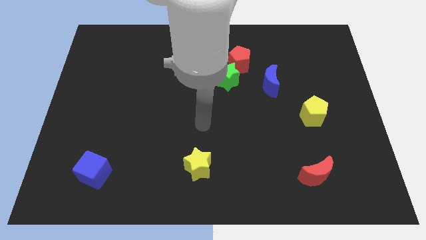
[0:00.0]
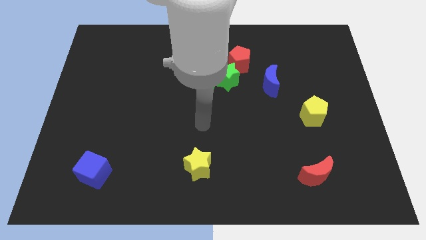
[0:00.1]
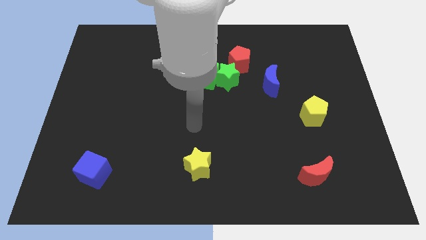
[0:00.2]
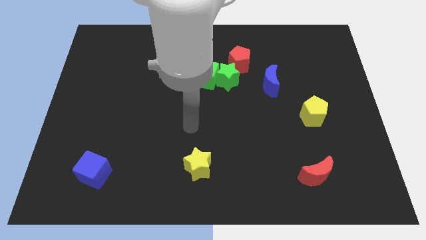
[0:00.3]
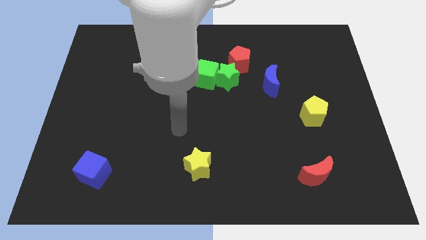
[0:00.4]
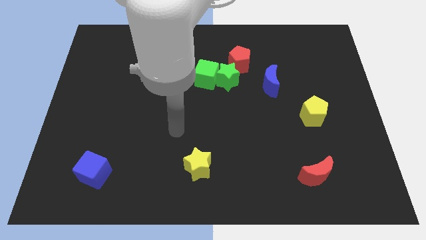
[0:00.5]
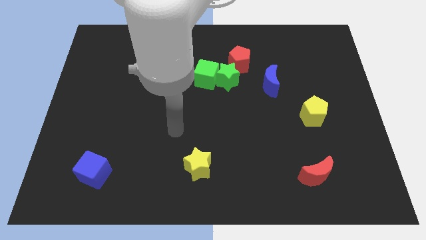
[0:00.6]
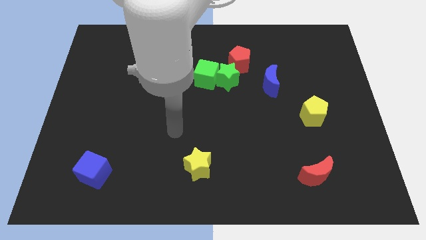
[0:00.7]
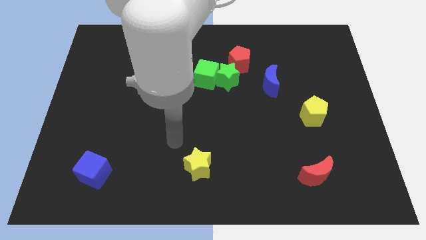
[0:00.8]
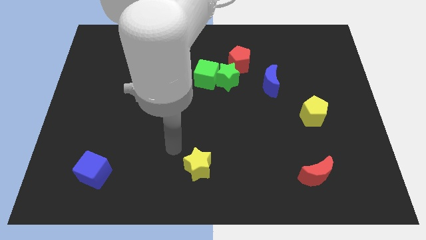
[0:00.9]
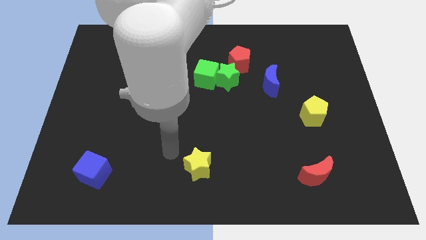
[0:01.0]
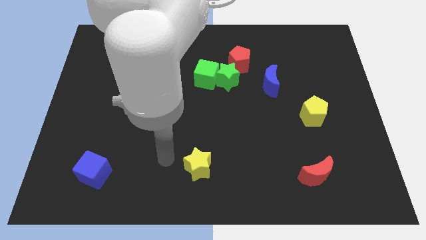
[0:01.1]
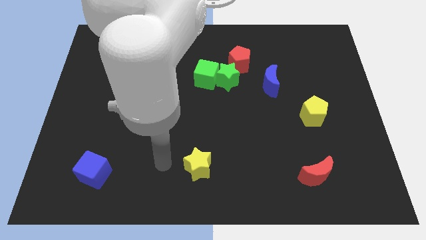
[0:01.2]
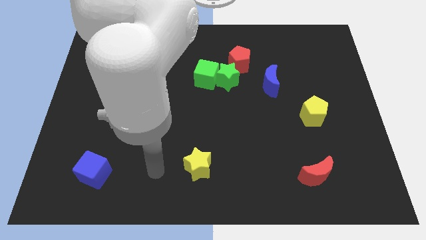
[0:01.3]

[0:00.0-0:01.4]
point your arm at the left of the yellow star

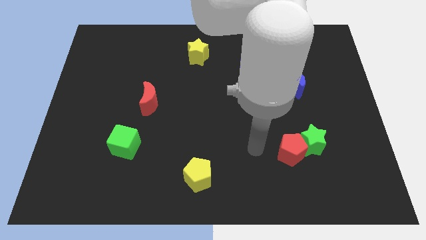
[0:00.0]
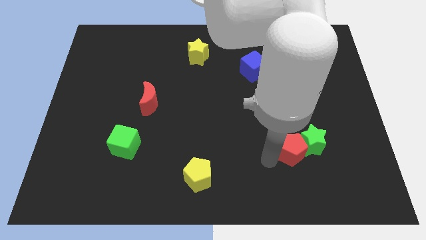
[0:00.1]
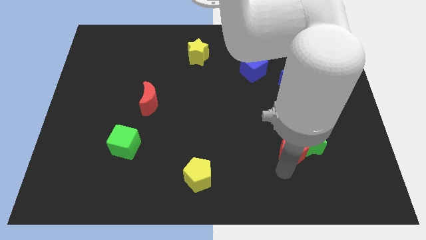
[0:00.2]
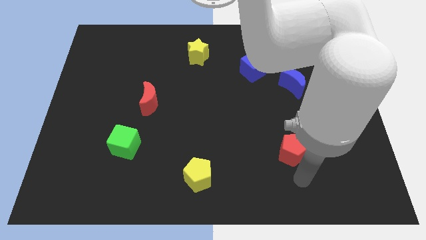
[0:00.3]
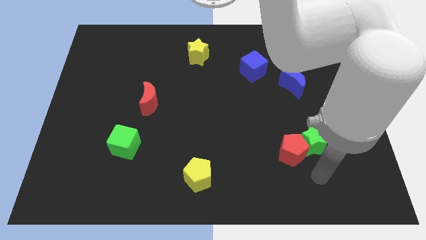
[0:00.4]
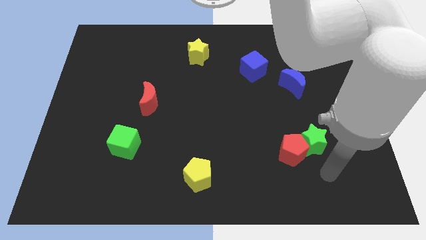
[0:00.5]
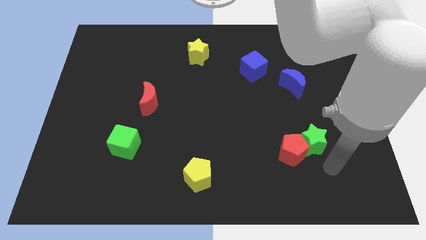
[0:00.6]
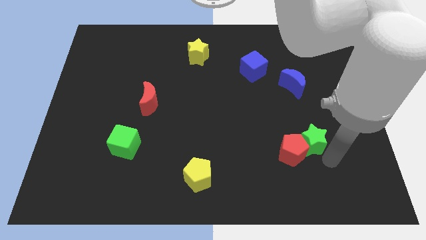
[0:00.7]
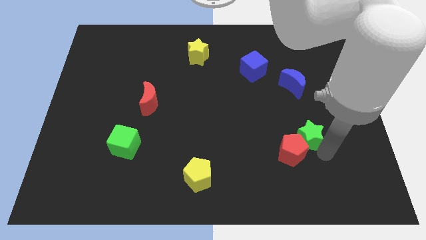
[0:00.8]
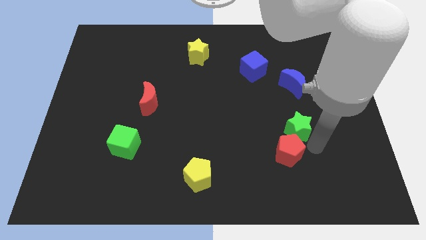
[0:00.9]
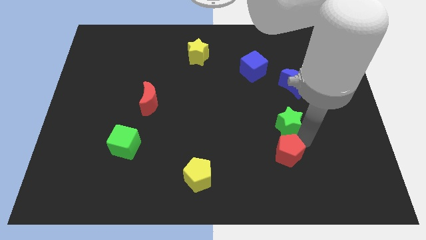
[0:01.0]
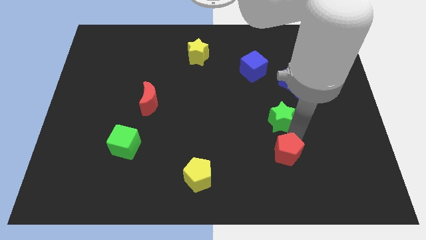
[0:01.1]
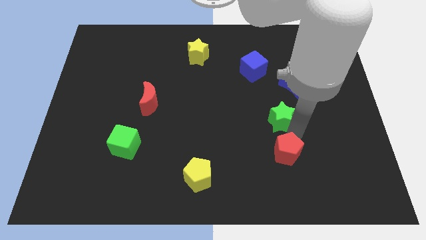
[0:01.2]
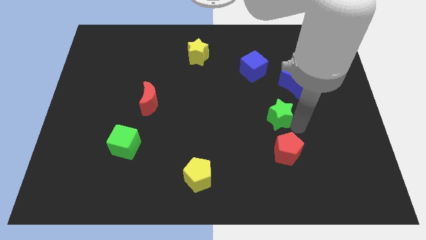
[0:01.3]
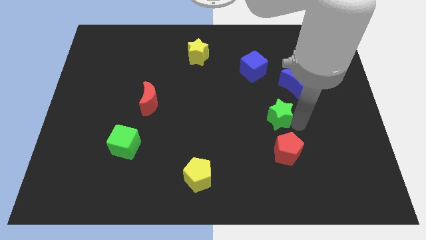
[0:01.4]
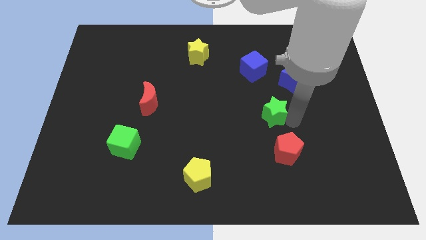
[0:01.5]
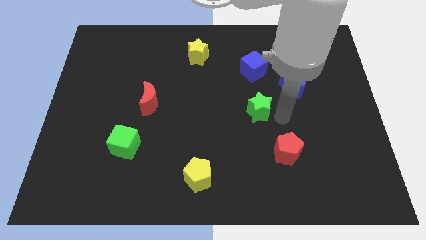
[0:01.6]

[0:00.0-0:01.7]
place the green star in between the blue cube and red pentagon

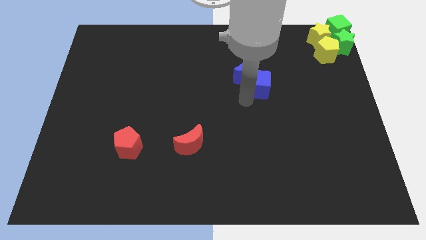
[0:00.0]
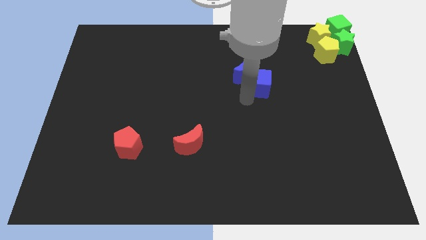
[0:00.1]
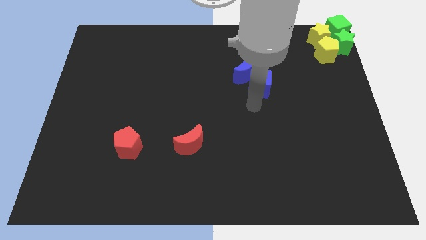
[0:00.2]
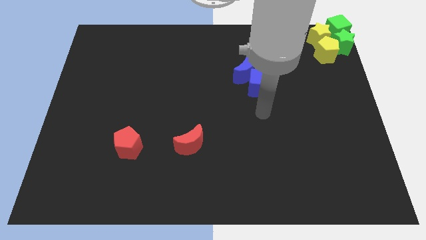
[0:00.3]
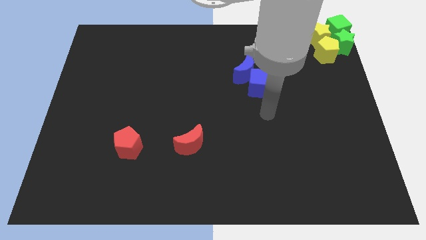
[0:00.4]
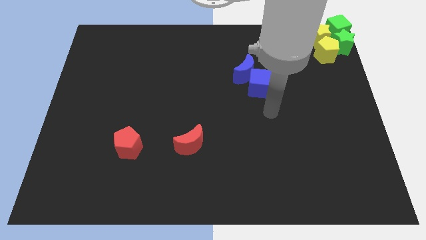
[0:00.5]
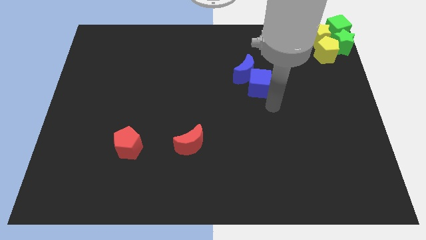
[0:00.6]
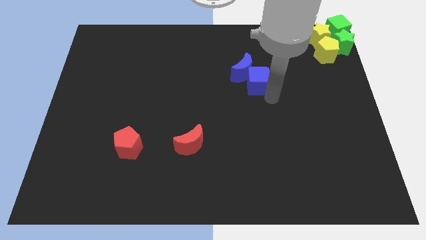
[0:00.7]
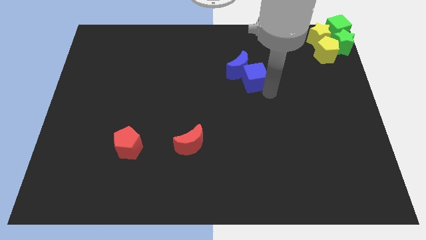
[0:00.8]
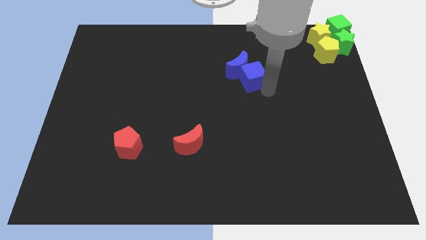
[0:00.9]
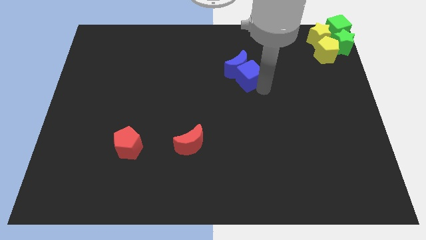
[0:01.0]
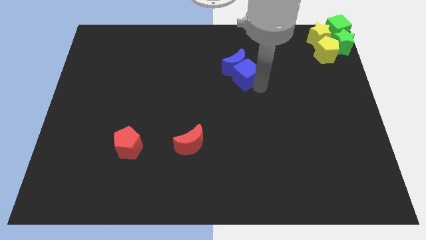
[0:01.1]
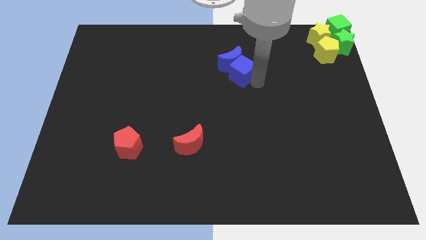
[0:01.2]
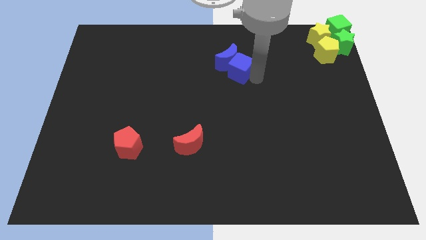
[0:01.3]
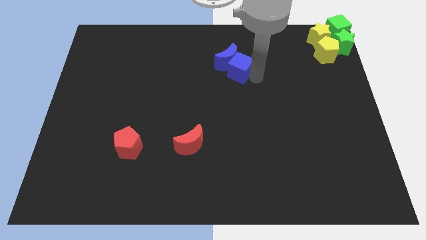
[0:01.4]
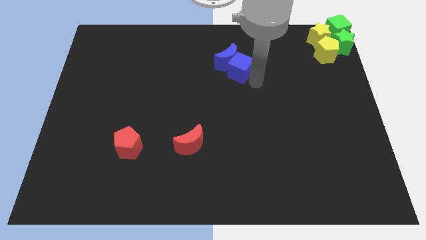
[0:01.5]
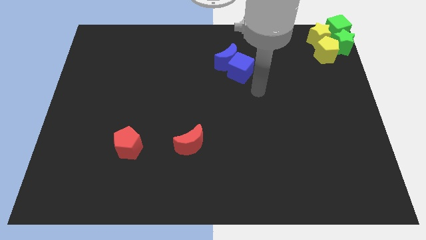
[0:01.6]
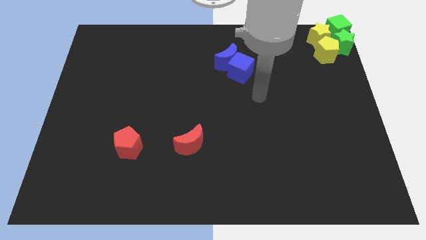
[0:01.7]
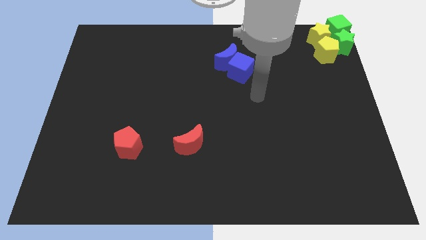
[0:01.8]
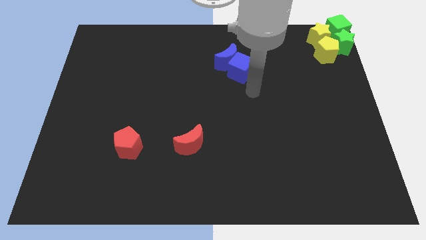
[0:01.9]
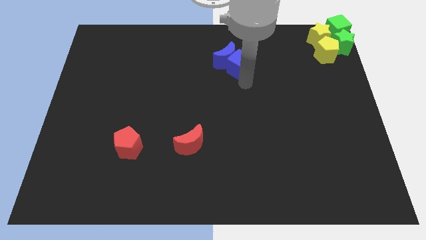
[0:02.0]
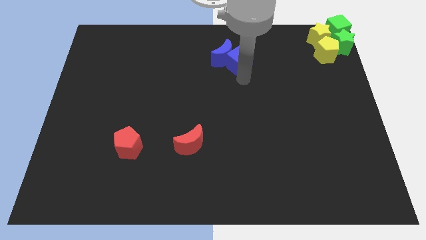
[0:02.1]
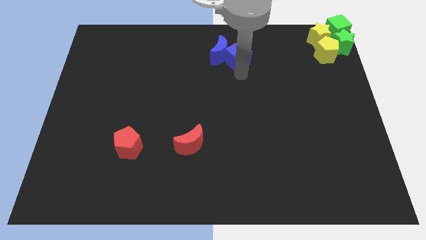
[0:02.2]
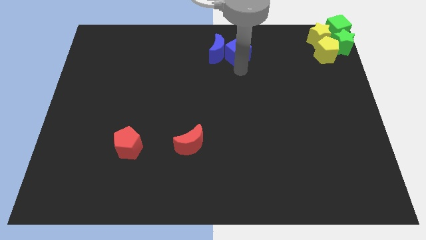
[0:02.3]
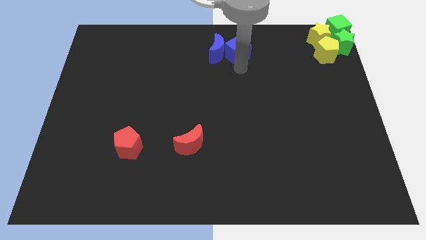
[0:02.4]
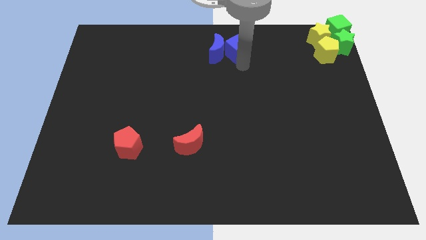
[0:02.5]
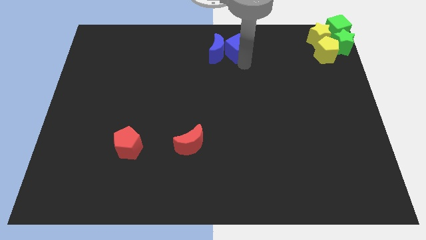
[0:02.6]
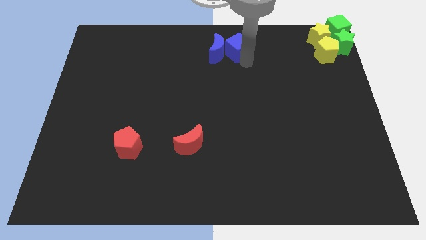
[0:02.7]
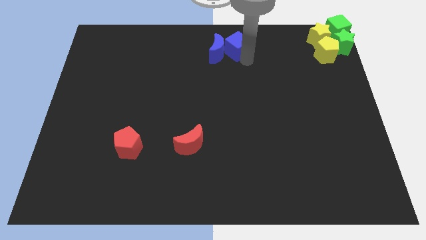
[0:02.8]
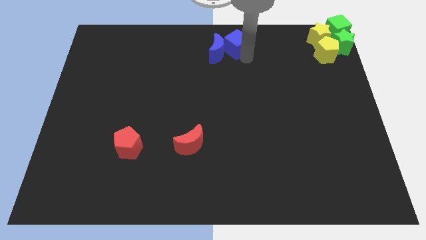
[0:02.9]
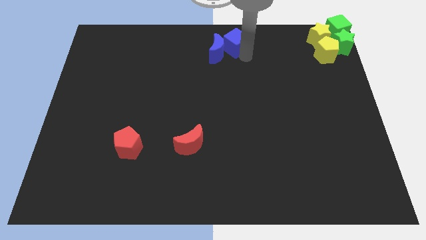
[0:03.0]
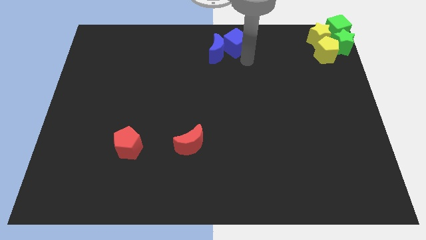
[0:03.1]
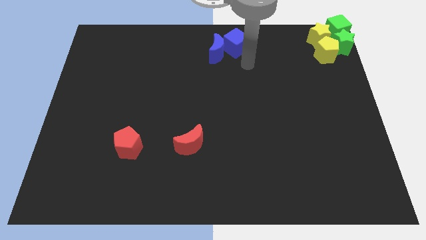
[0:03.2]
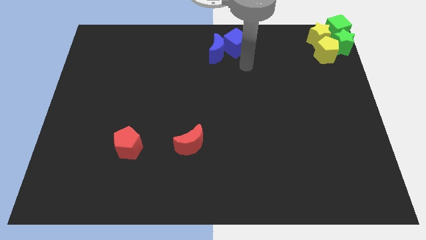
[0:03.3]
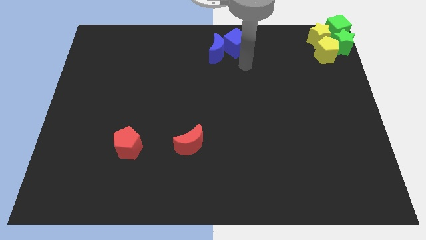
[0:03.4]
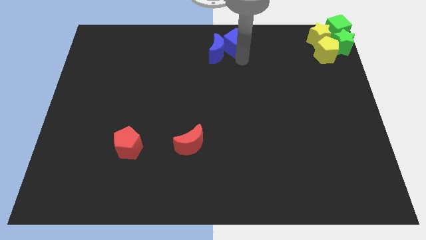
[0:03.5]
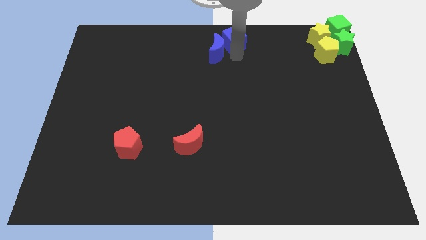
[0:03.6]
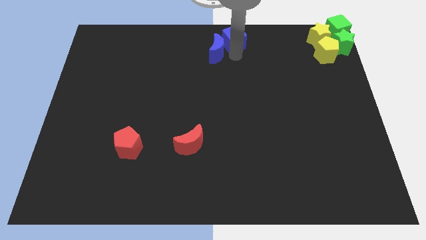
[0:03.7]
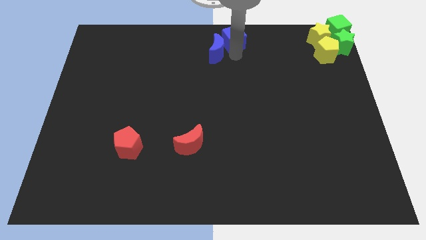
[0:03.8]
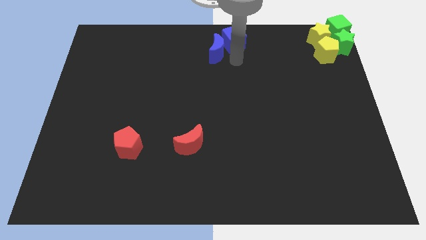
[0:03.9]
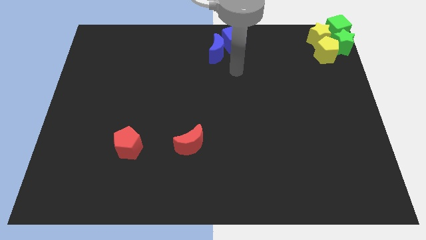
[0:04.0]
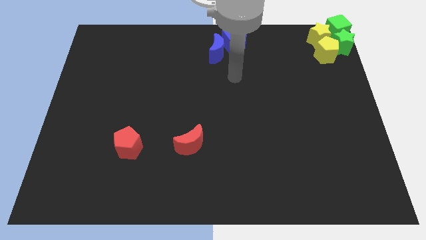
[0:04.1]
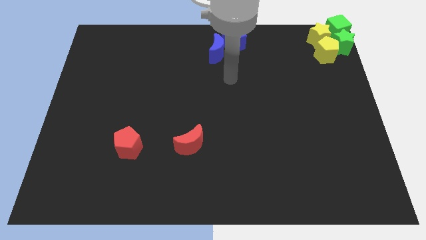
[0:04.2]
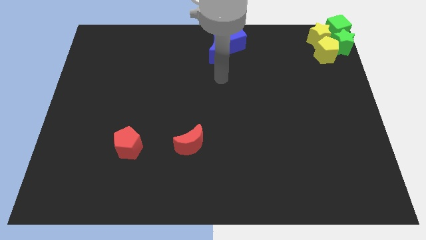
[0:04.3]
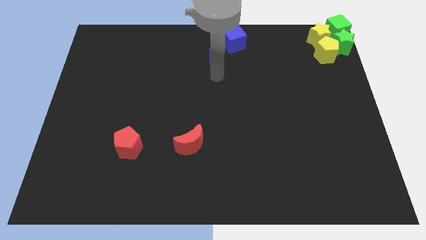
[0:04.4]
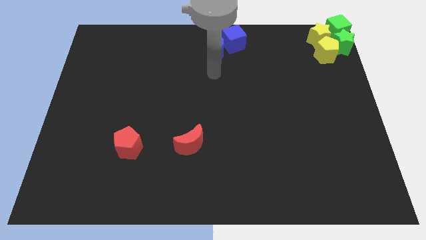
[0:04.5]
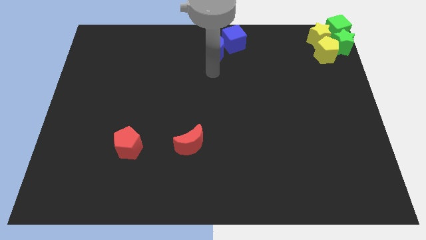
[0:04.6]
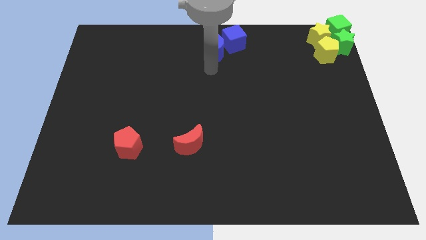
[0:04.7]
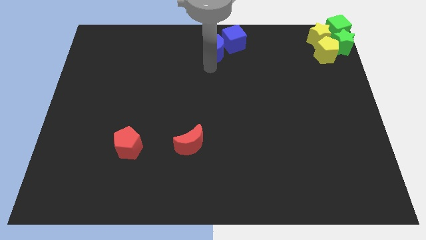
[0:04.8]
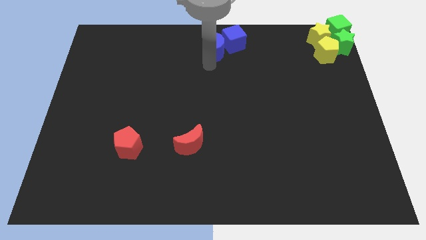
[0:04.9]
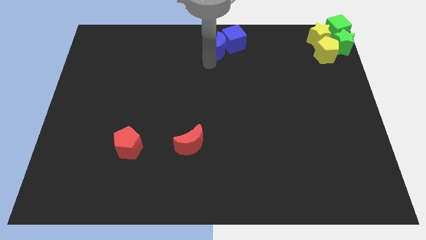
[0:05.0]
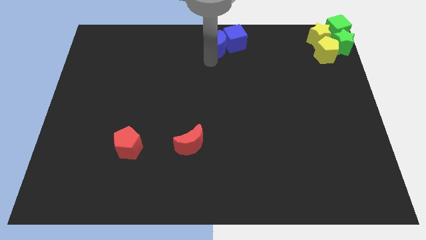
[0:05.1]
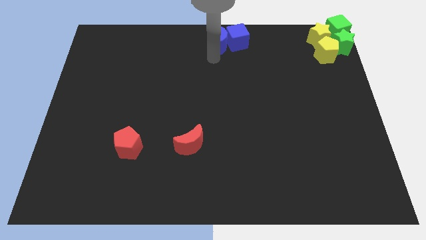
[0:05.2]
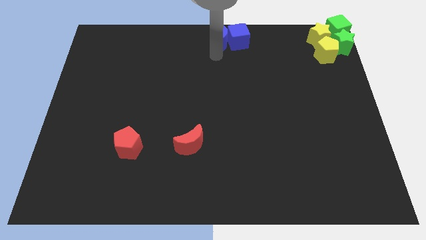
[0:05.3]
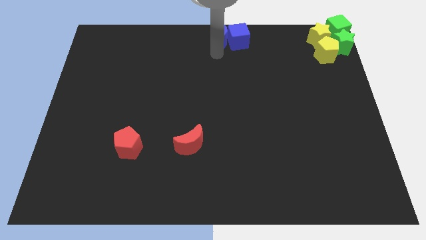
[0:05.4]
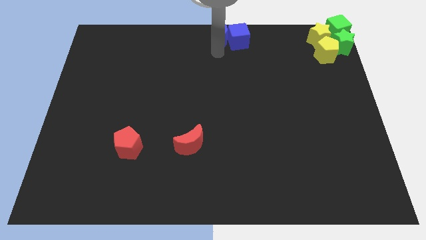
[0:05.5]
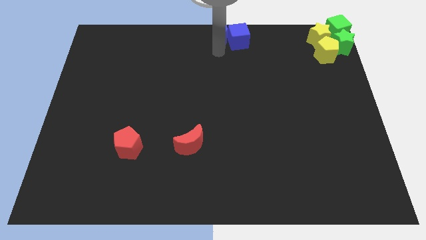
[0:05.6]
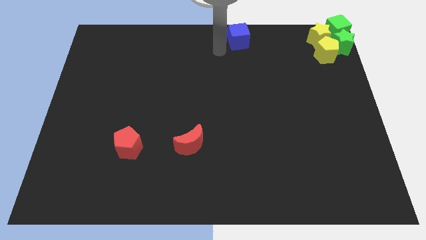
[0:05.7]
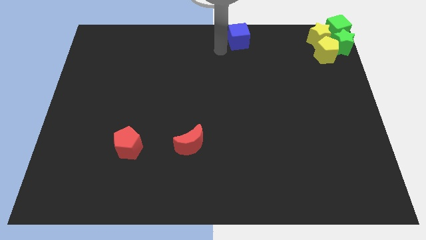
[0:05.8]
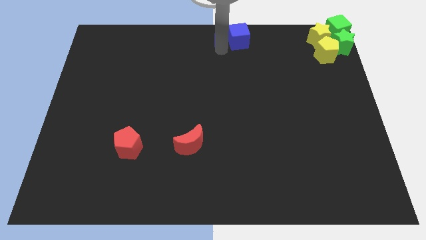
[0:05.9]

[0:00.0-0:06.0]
push both blue cube and blue crescent to the top center of the board
